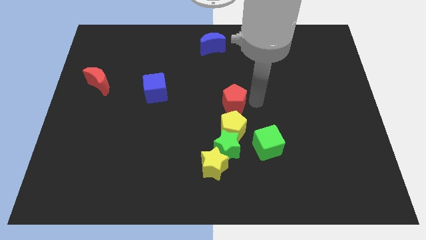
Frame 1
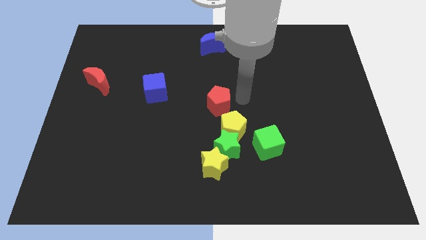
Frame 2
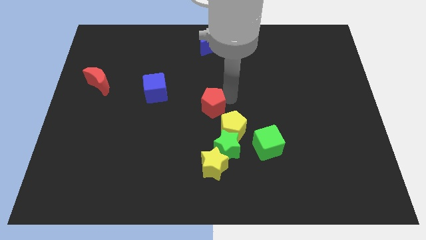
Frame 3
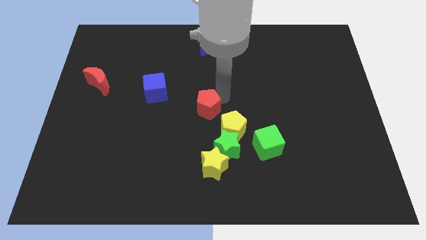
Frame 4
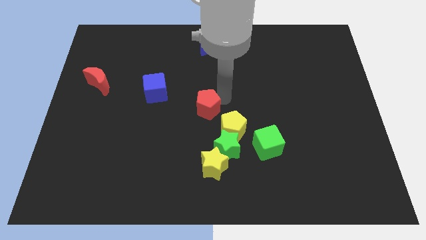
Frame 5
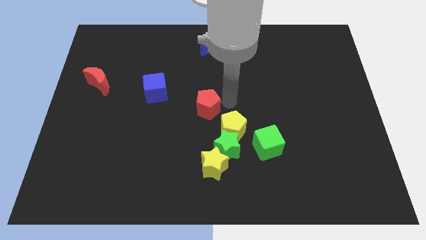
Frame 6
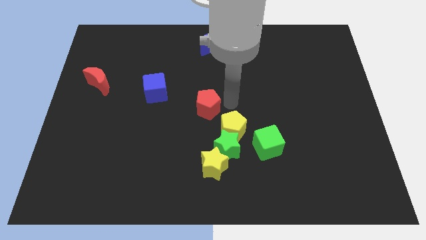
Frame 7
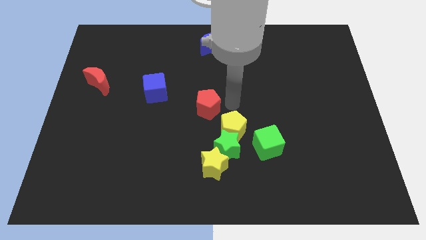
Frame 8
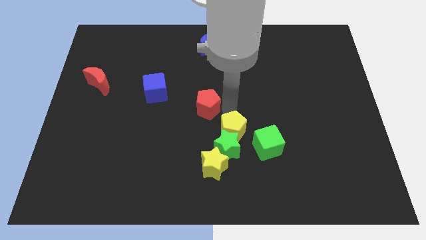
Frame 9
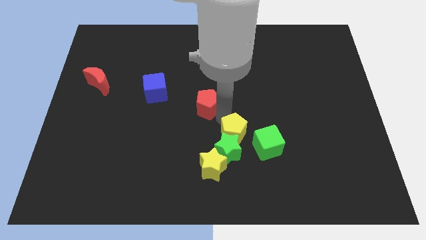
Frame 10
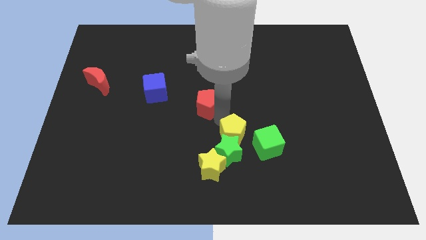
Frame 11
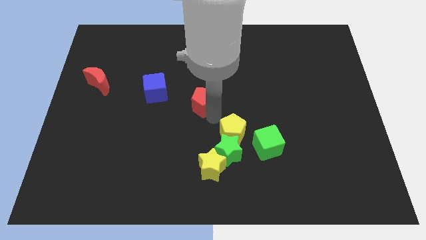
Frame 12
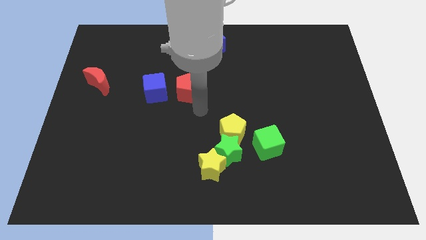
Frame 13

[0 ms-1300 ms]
push red pentagon beside blue cube

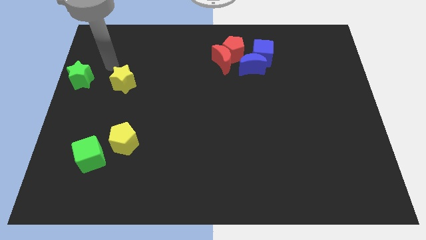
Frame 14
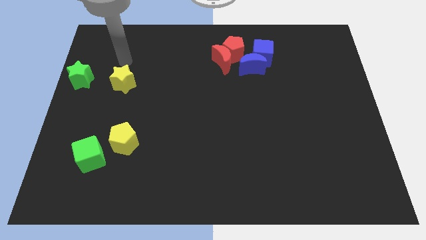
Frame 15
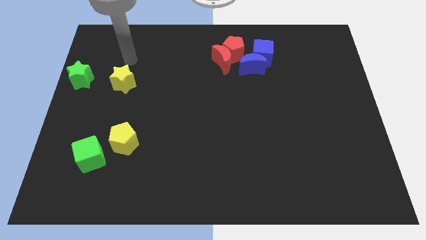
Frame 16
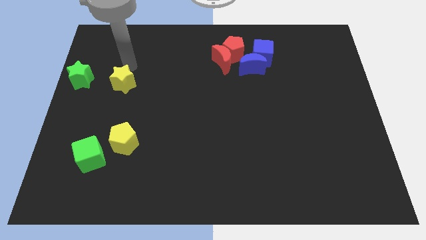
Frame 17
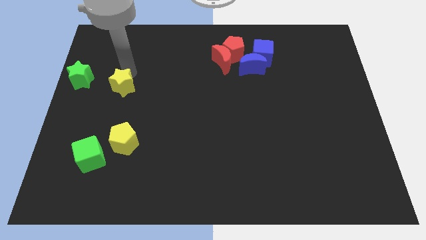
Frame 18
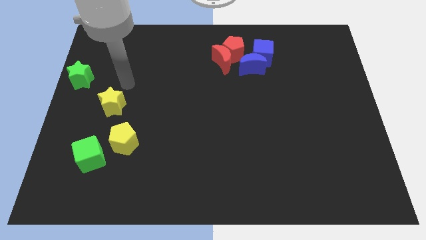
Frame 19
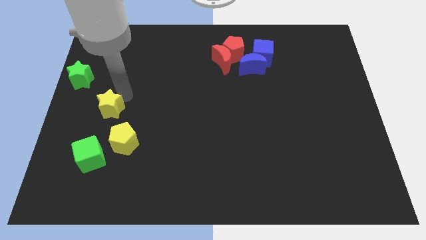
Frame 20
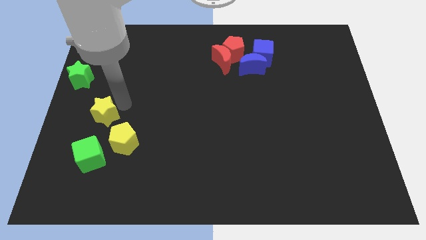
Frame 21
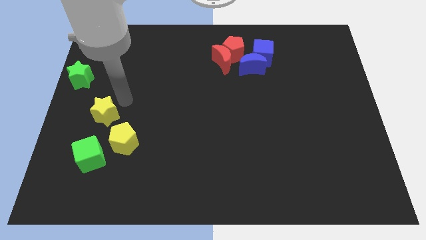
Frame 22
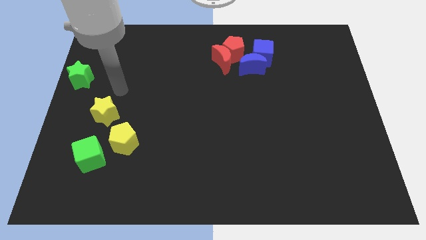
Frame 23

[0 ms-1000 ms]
push the yellow star to the top left of the yellow pentagon

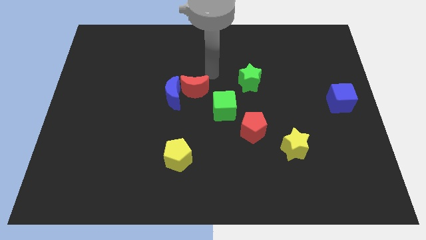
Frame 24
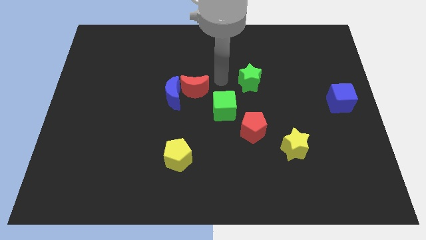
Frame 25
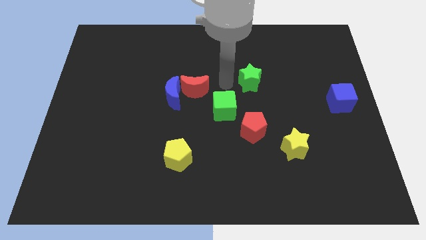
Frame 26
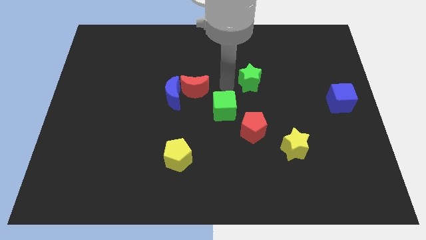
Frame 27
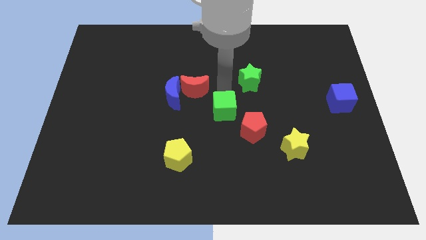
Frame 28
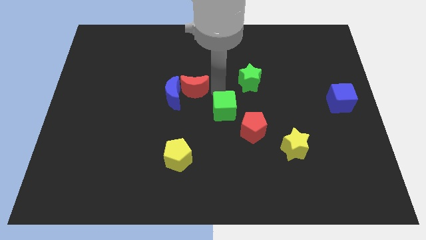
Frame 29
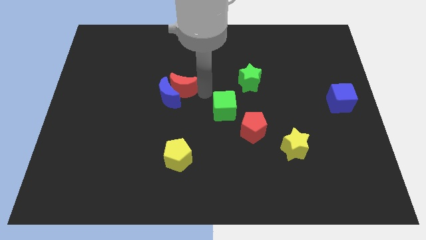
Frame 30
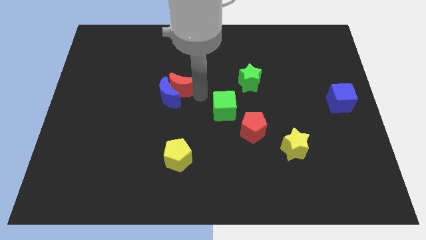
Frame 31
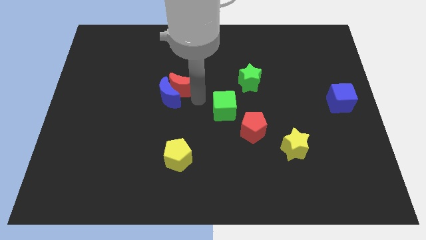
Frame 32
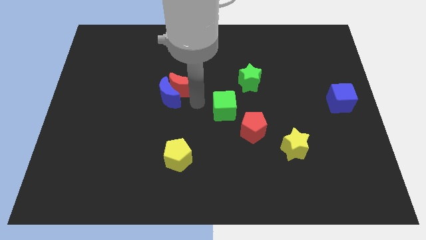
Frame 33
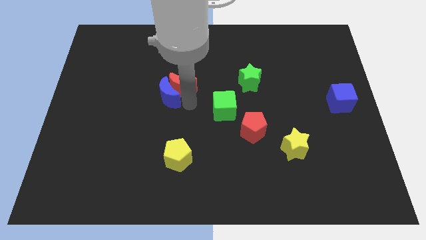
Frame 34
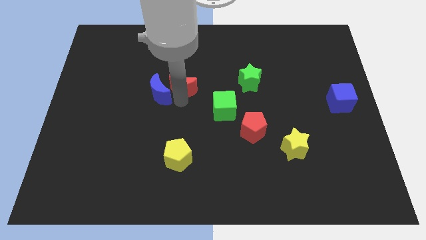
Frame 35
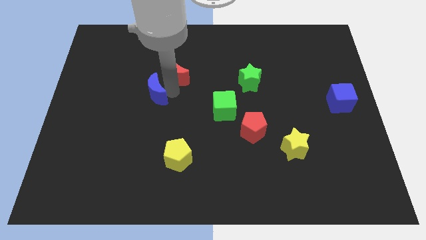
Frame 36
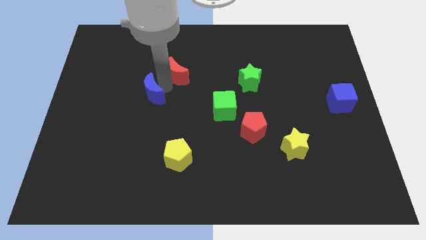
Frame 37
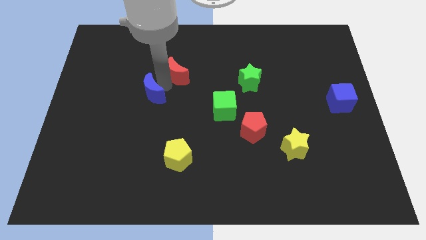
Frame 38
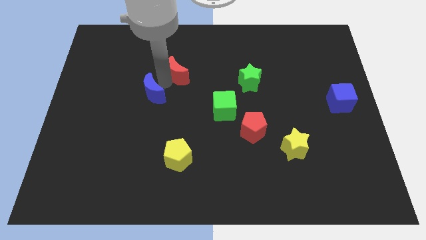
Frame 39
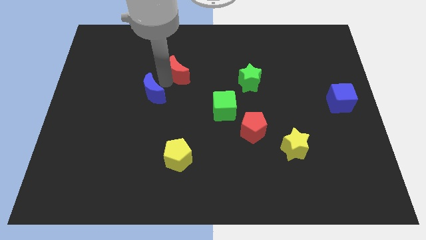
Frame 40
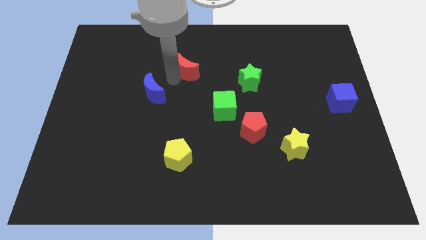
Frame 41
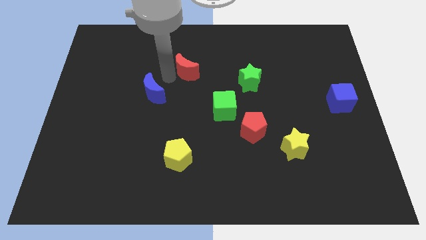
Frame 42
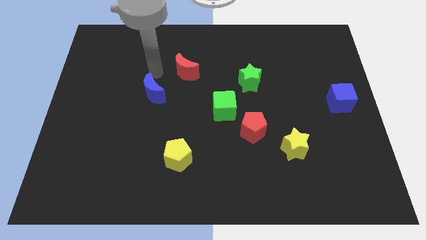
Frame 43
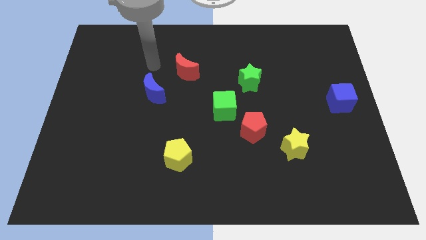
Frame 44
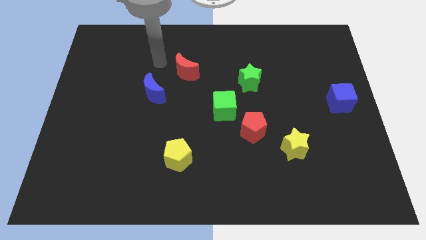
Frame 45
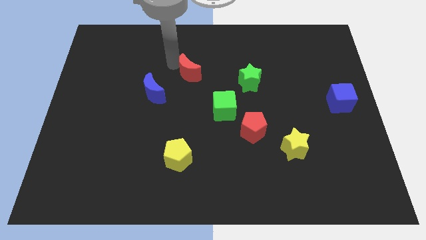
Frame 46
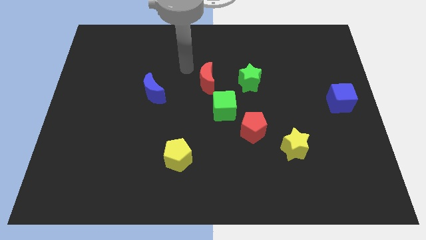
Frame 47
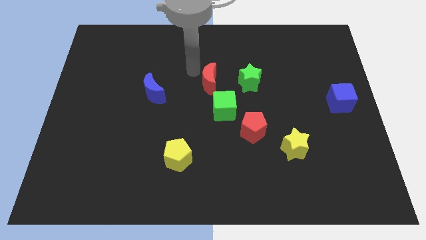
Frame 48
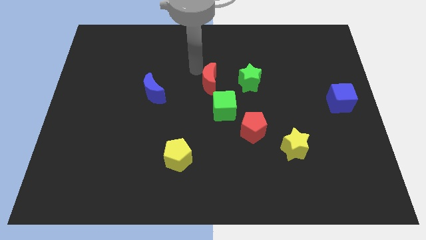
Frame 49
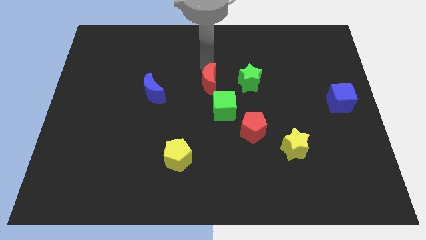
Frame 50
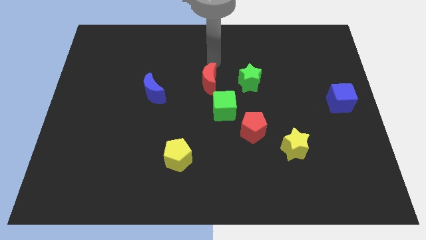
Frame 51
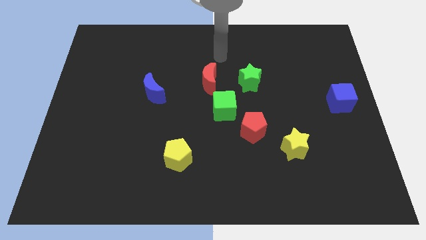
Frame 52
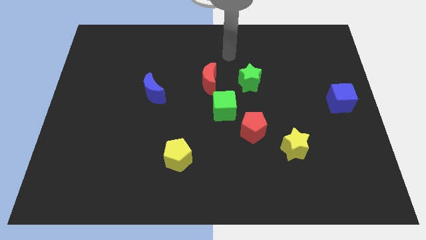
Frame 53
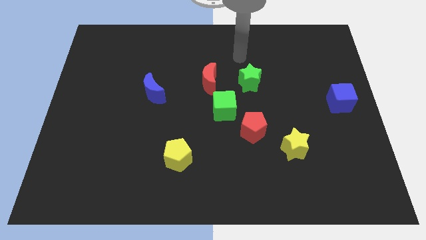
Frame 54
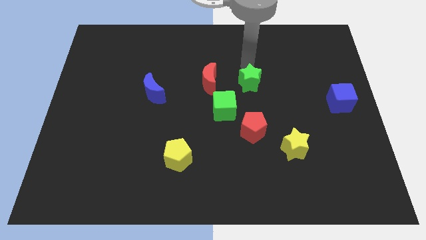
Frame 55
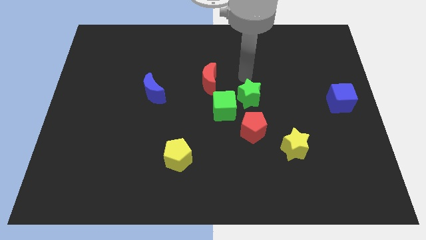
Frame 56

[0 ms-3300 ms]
move the red crescent away from the blue crescent

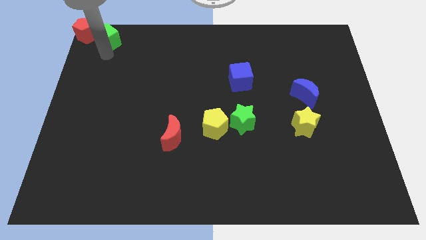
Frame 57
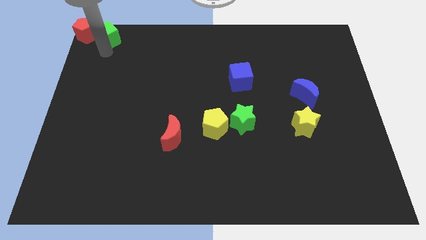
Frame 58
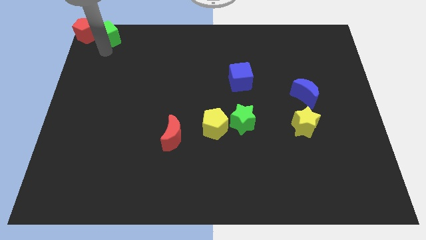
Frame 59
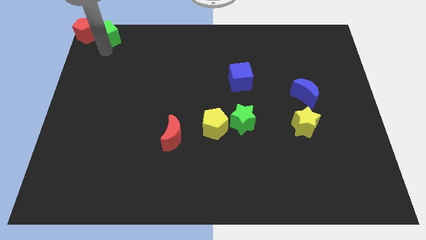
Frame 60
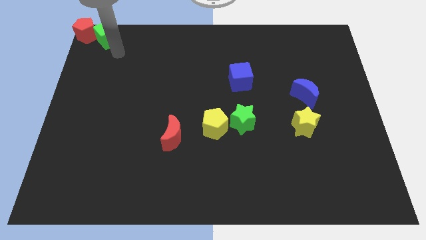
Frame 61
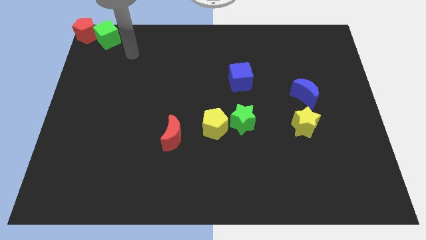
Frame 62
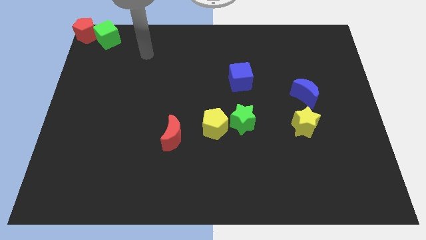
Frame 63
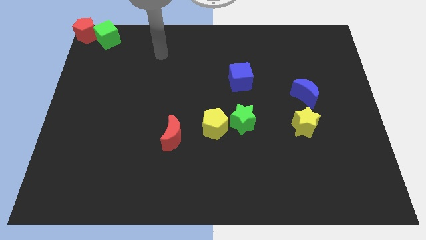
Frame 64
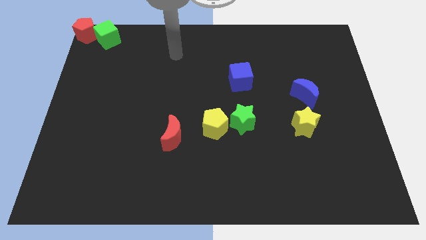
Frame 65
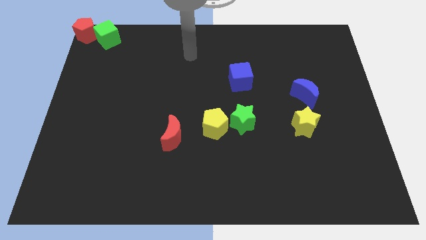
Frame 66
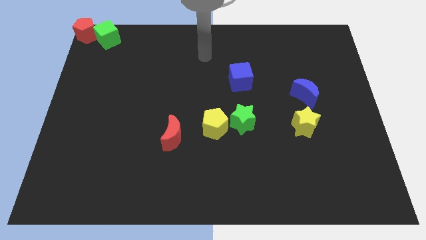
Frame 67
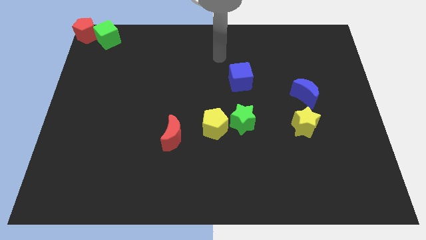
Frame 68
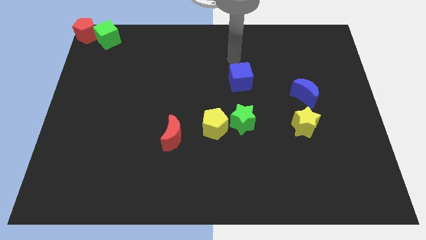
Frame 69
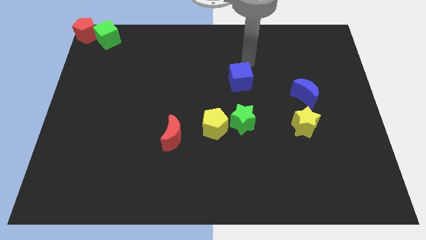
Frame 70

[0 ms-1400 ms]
place your arm to the top right side of the blue cube

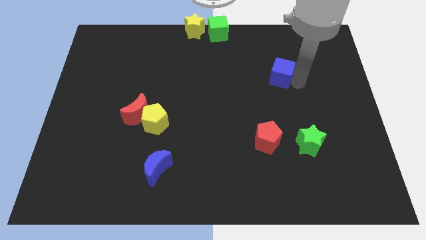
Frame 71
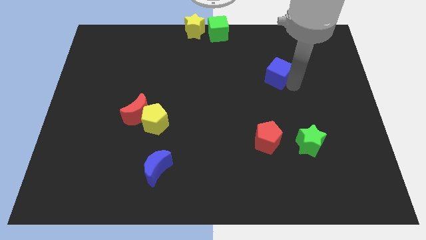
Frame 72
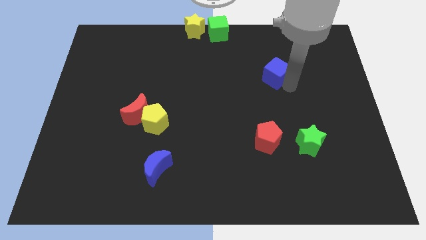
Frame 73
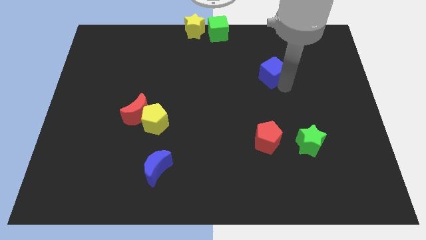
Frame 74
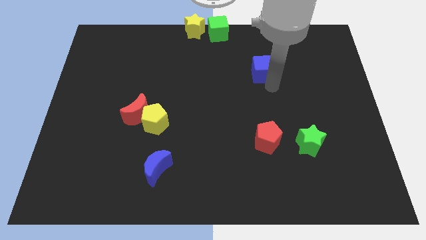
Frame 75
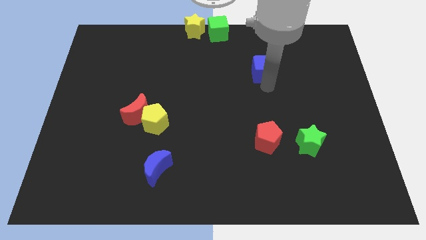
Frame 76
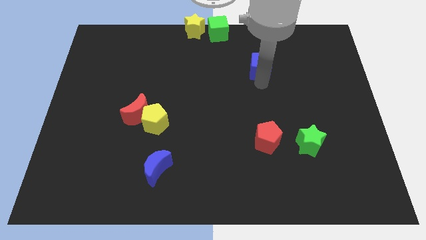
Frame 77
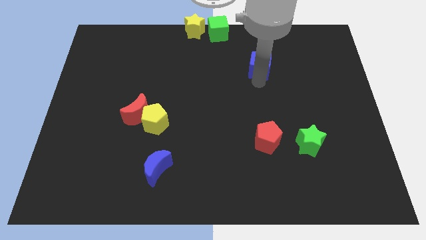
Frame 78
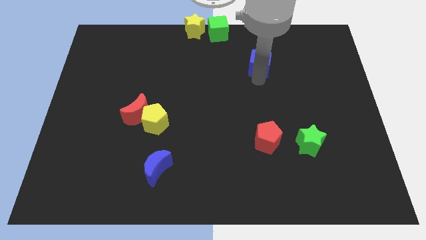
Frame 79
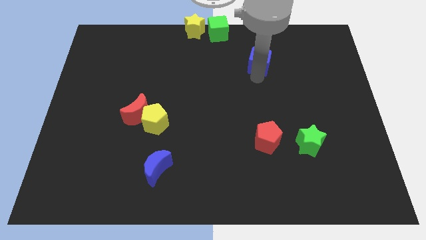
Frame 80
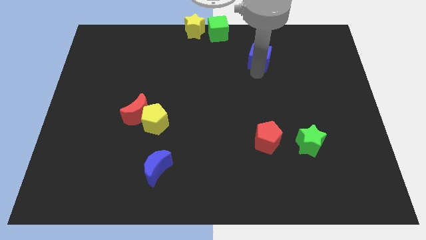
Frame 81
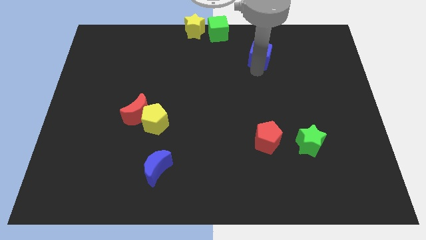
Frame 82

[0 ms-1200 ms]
move the blue cube to the top of the board

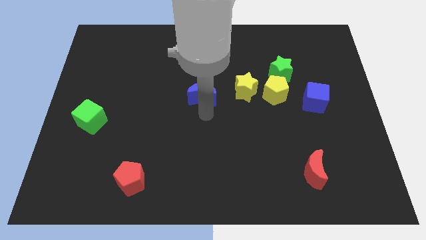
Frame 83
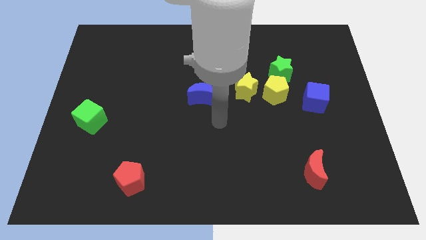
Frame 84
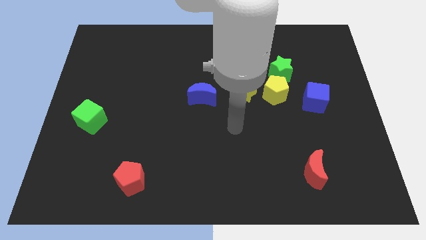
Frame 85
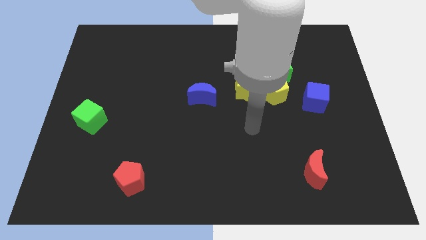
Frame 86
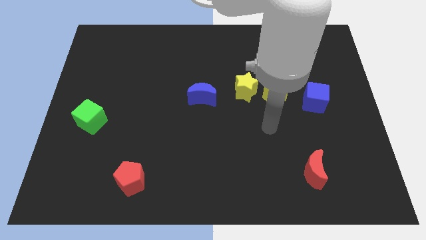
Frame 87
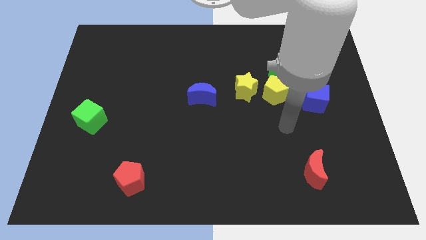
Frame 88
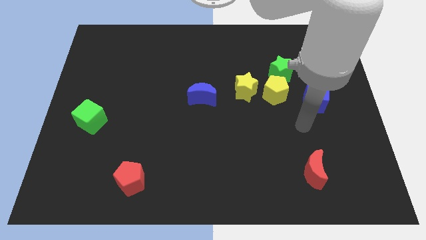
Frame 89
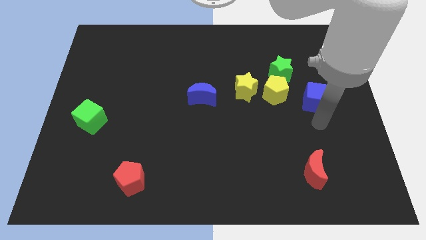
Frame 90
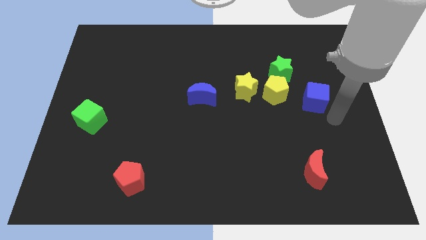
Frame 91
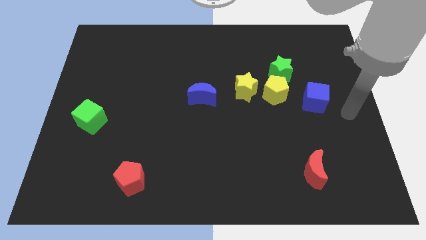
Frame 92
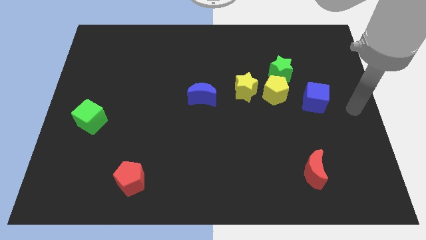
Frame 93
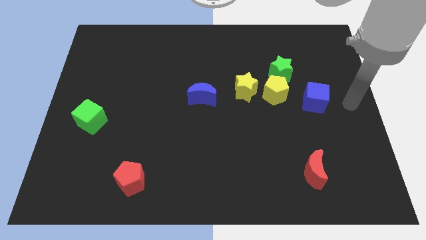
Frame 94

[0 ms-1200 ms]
move the arm away from the blue moon
